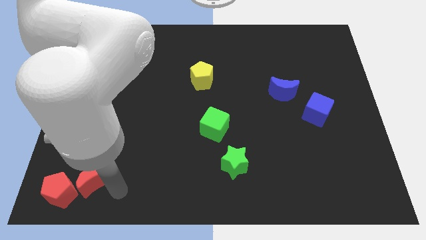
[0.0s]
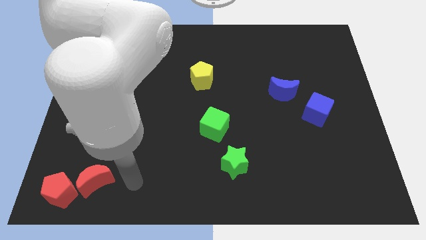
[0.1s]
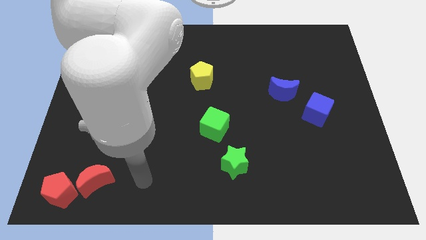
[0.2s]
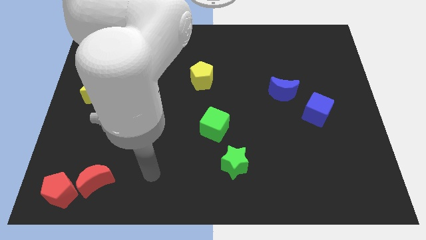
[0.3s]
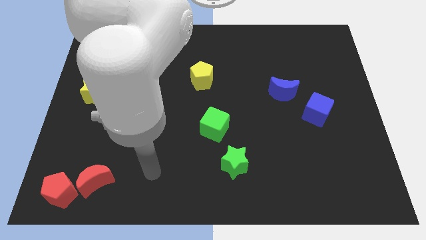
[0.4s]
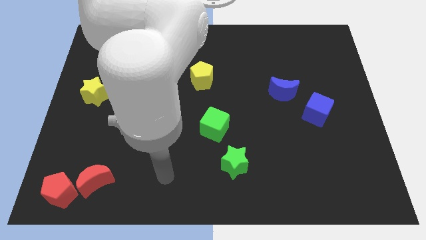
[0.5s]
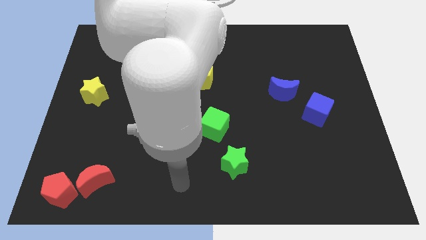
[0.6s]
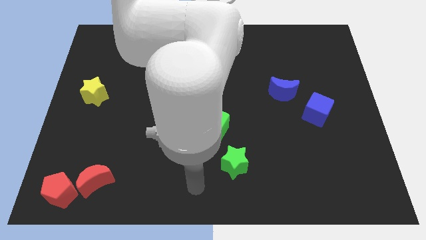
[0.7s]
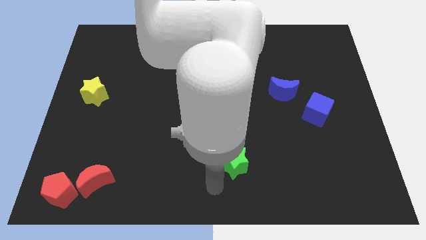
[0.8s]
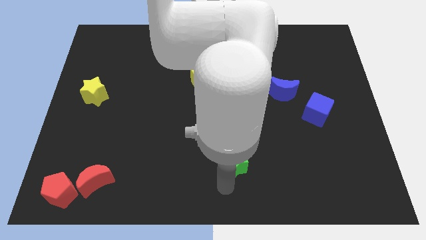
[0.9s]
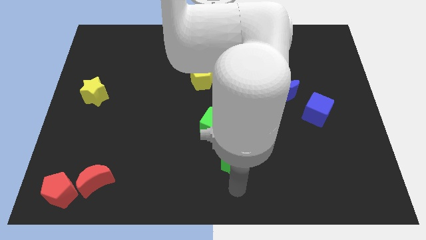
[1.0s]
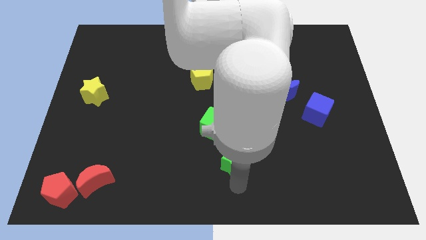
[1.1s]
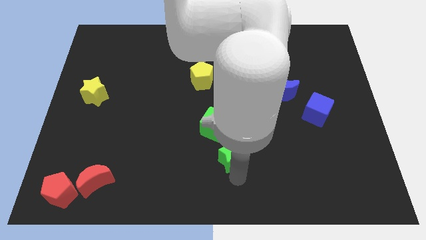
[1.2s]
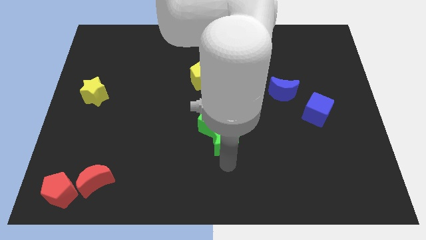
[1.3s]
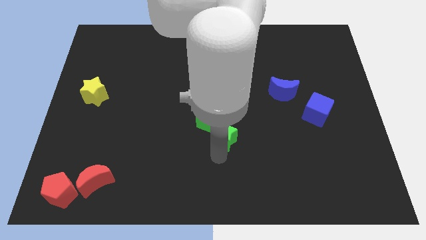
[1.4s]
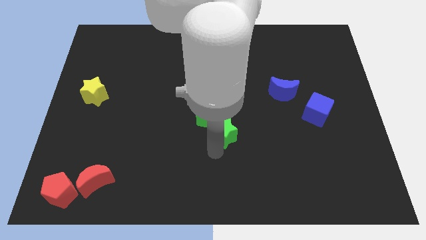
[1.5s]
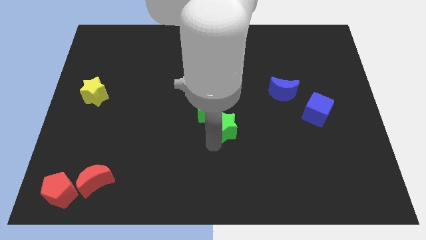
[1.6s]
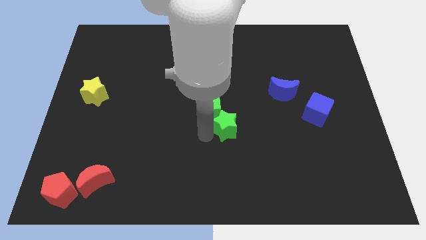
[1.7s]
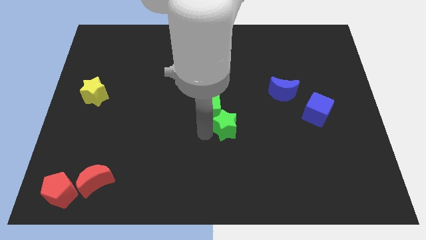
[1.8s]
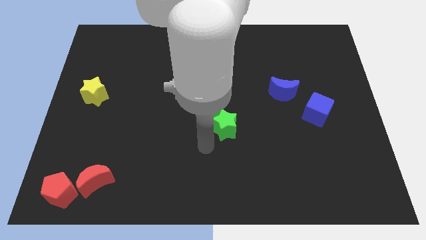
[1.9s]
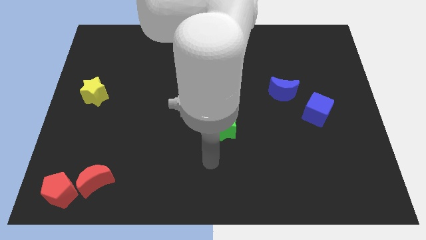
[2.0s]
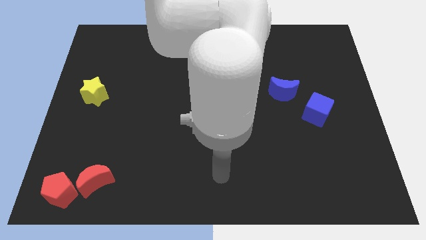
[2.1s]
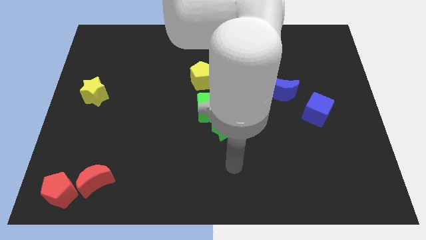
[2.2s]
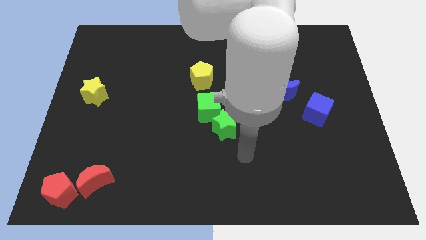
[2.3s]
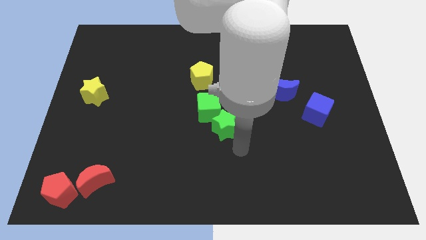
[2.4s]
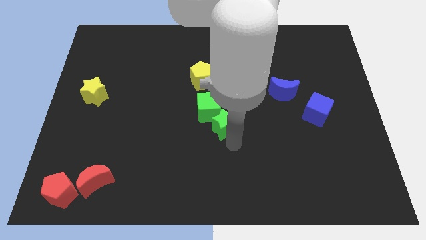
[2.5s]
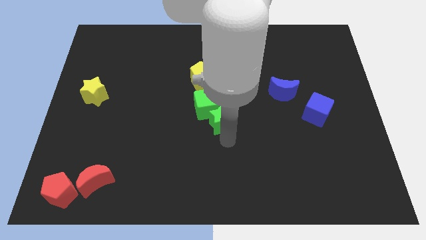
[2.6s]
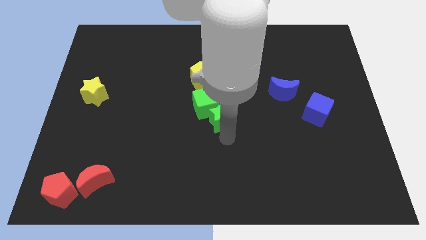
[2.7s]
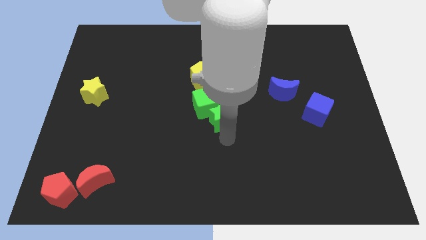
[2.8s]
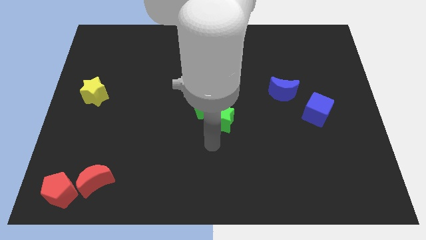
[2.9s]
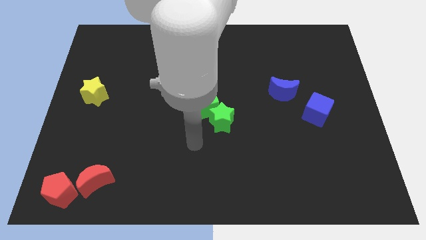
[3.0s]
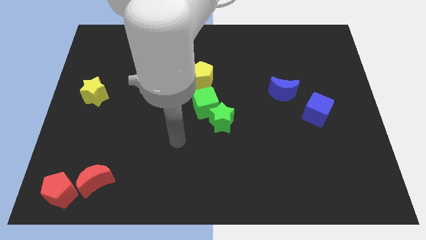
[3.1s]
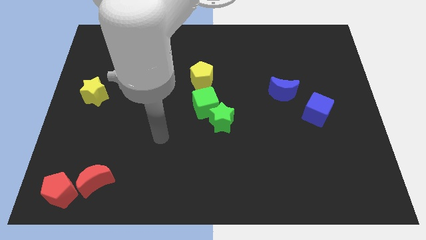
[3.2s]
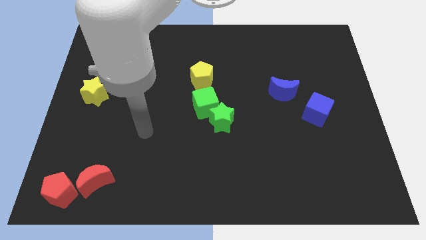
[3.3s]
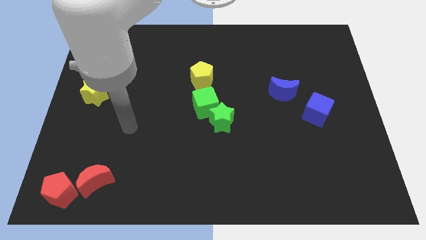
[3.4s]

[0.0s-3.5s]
slide the green blocks together close to the yellow pentagon

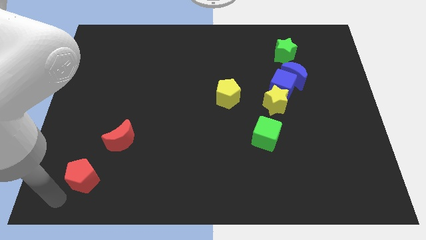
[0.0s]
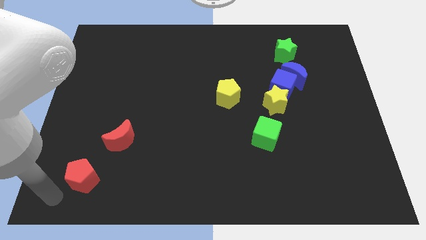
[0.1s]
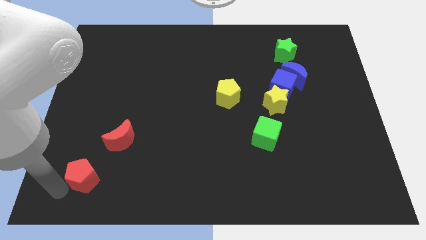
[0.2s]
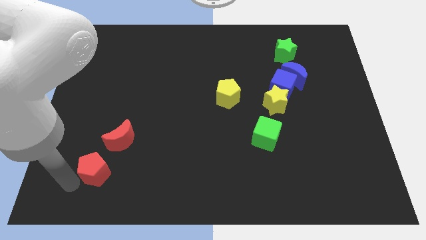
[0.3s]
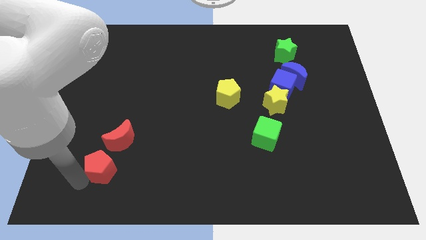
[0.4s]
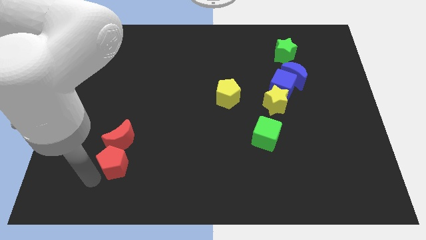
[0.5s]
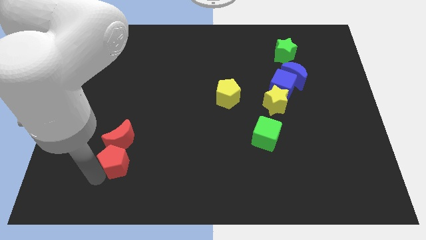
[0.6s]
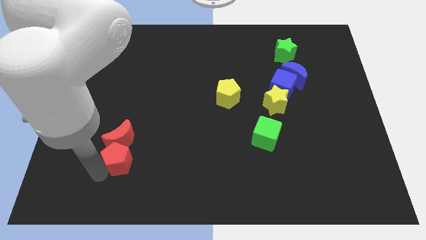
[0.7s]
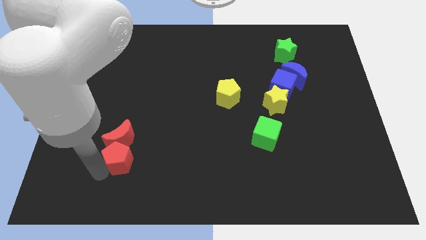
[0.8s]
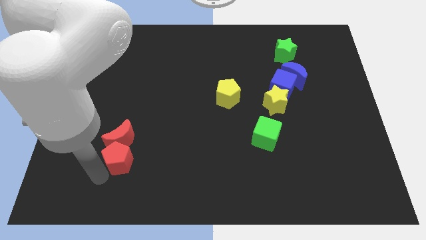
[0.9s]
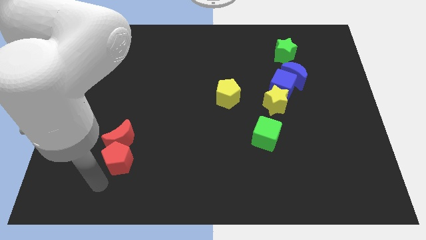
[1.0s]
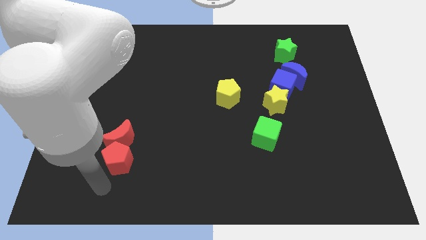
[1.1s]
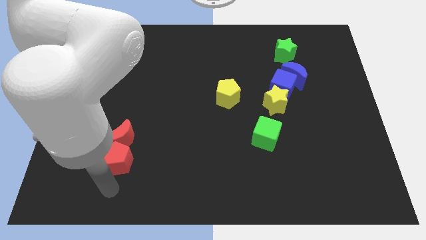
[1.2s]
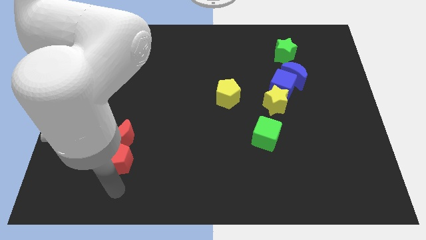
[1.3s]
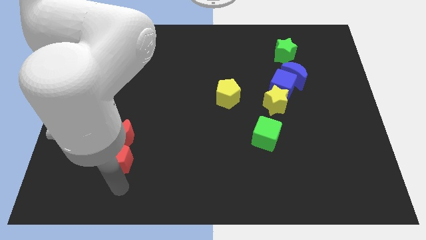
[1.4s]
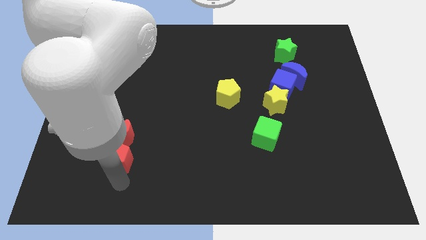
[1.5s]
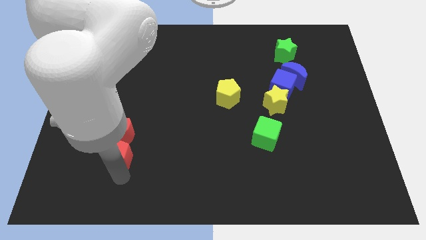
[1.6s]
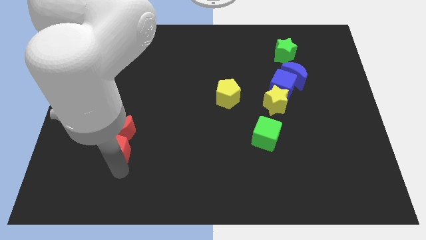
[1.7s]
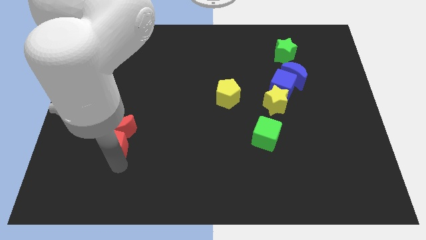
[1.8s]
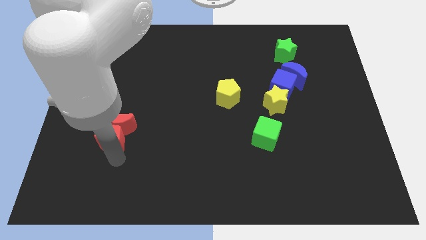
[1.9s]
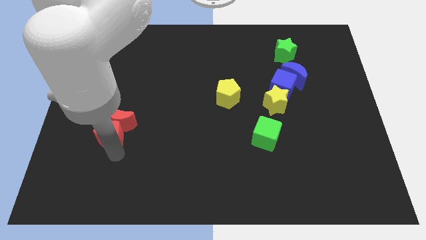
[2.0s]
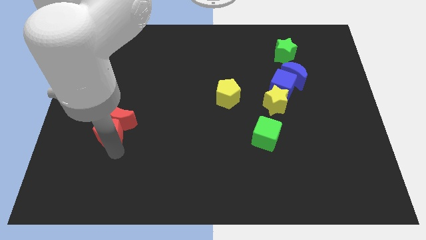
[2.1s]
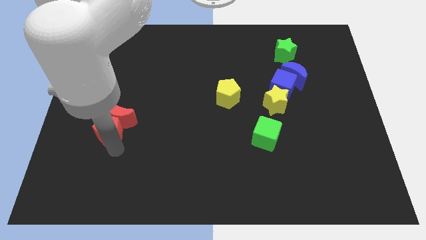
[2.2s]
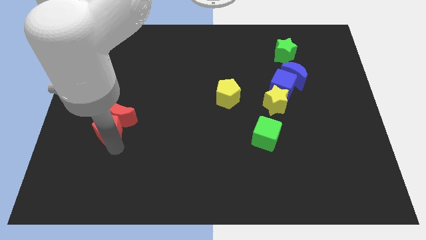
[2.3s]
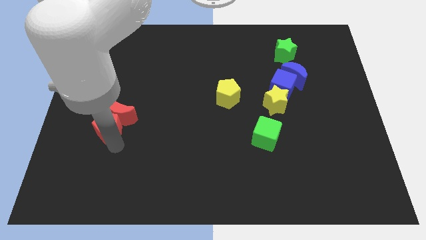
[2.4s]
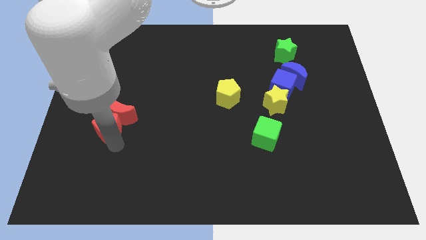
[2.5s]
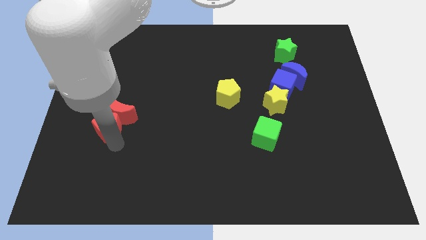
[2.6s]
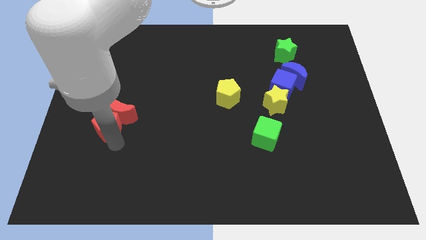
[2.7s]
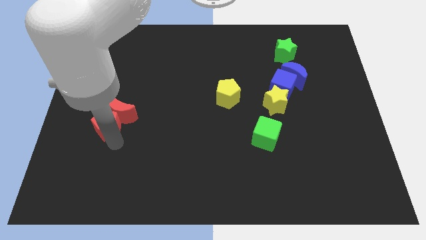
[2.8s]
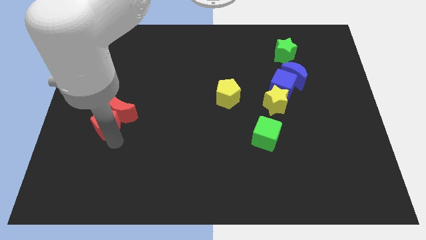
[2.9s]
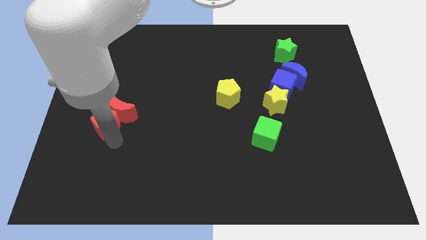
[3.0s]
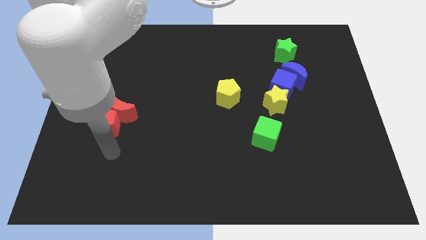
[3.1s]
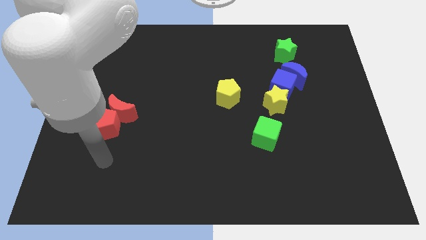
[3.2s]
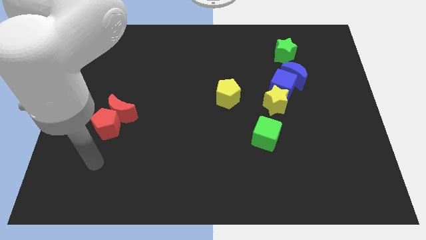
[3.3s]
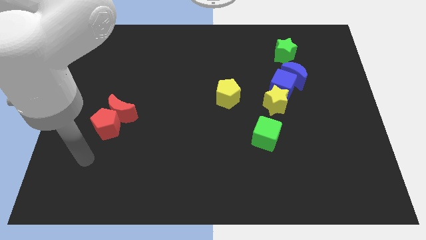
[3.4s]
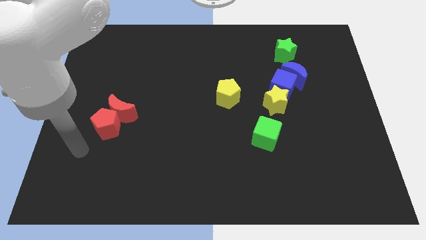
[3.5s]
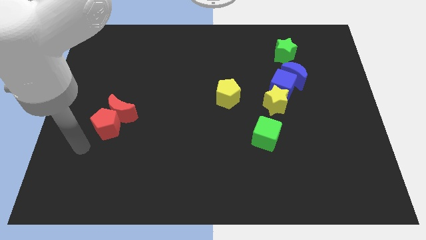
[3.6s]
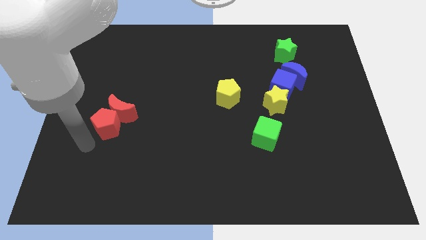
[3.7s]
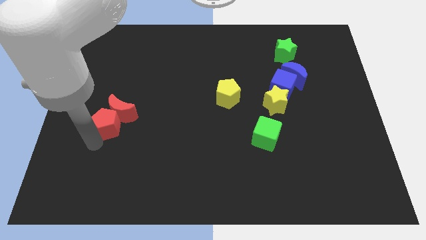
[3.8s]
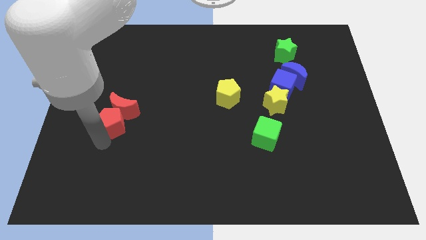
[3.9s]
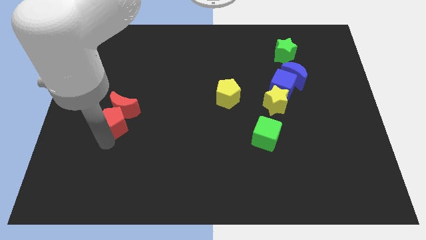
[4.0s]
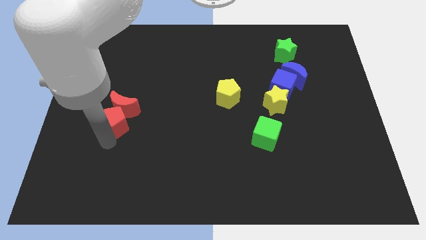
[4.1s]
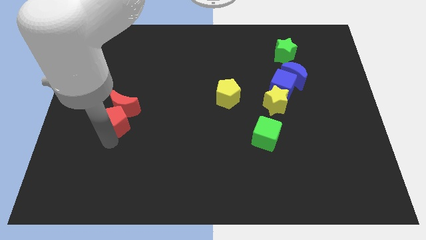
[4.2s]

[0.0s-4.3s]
push the red pentagon into the red moon

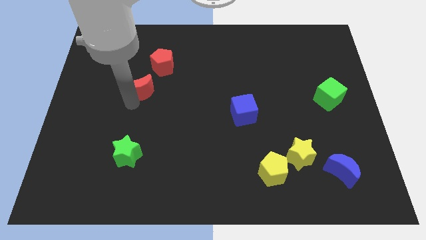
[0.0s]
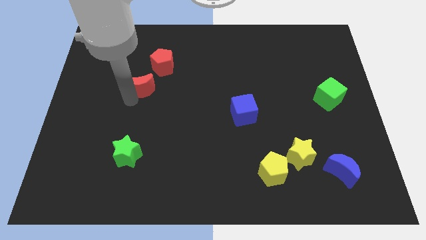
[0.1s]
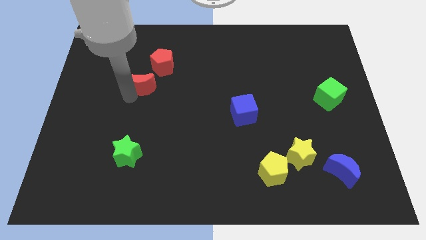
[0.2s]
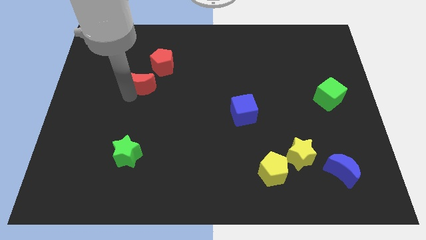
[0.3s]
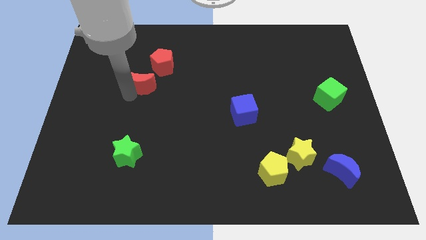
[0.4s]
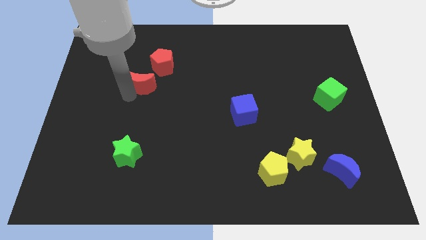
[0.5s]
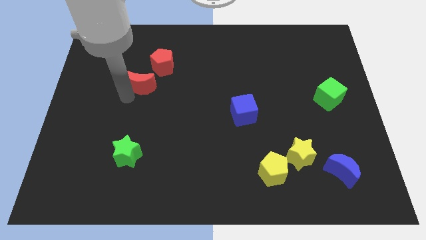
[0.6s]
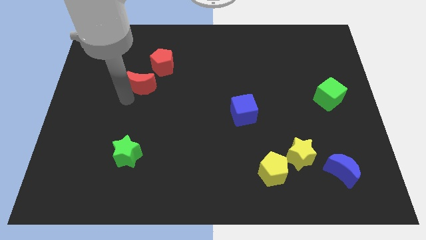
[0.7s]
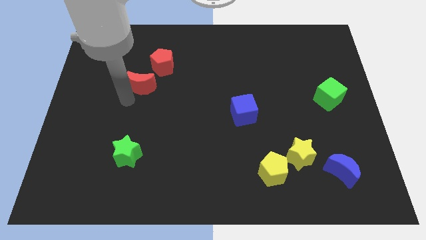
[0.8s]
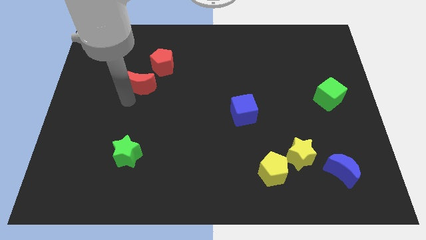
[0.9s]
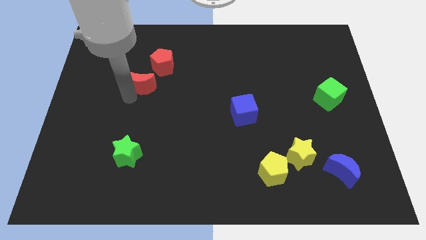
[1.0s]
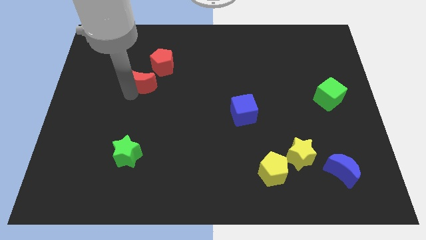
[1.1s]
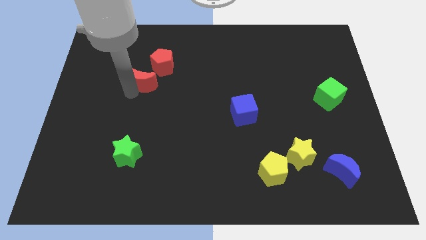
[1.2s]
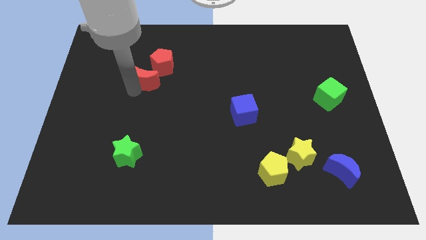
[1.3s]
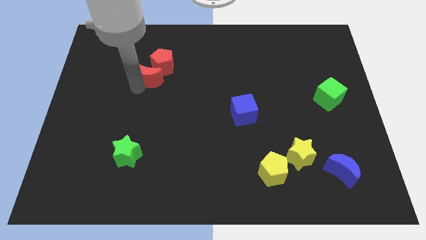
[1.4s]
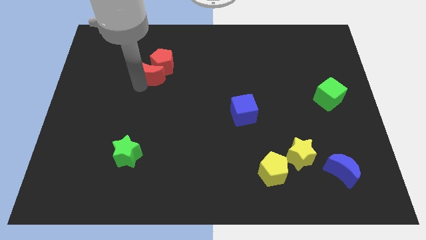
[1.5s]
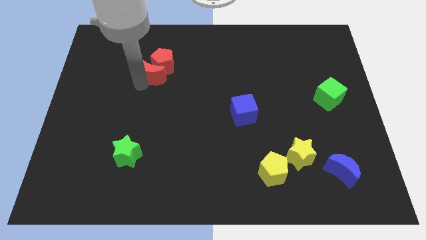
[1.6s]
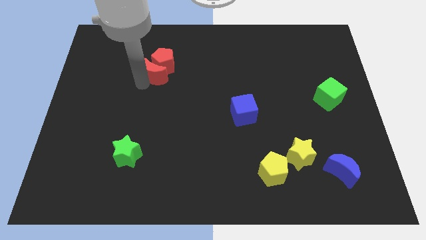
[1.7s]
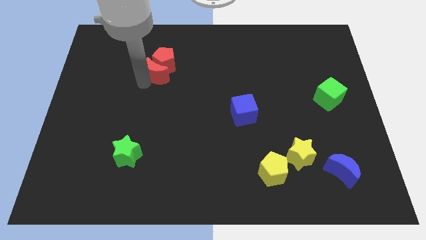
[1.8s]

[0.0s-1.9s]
drag the red moon into the red pentagon
